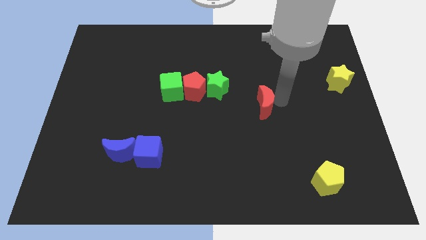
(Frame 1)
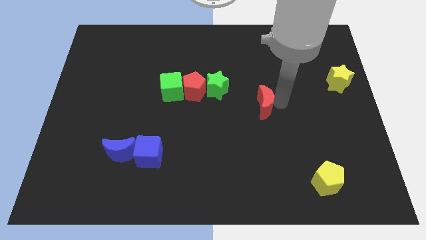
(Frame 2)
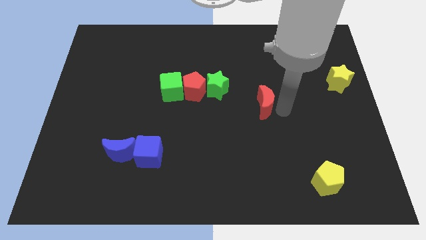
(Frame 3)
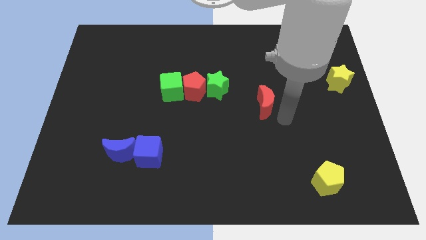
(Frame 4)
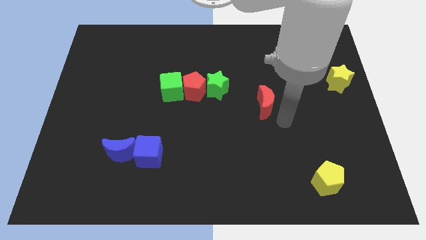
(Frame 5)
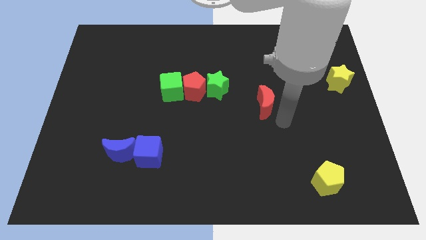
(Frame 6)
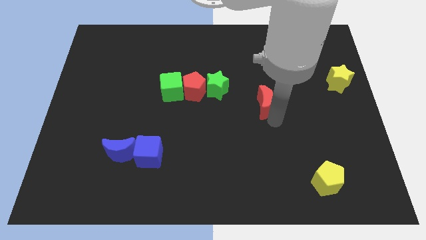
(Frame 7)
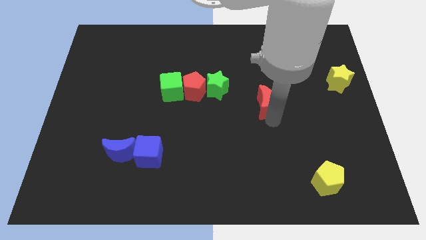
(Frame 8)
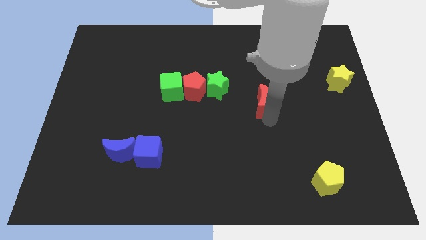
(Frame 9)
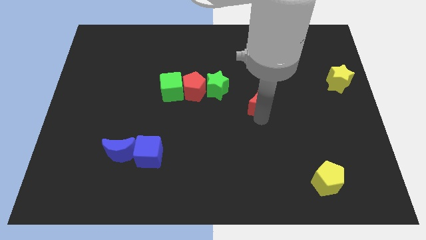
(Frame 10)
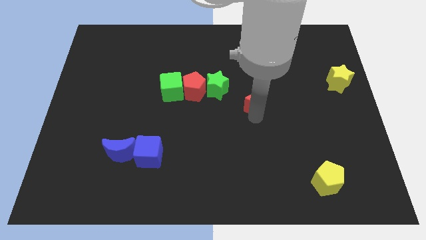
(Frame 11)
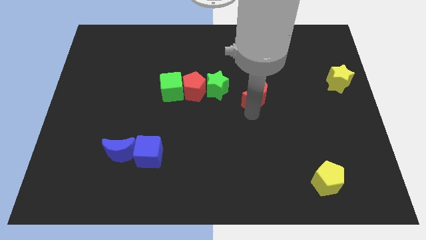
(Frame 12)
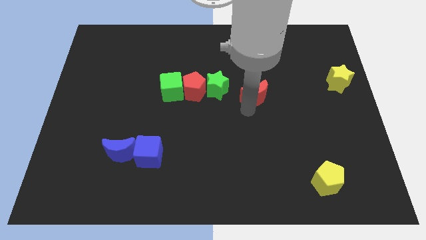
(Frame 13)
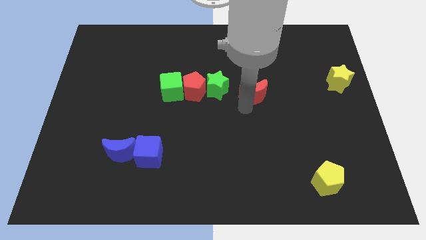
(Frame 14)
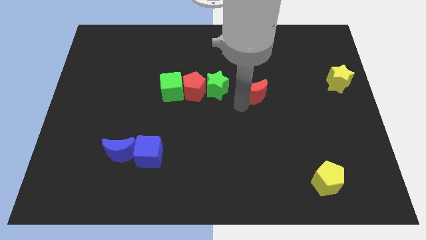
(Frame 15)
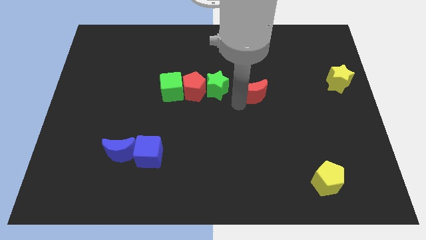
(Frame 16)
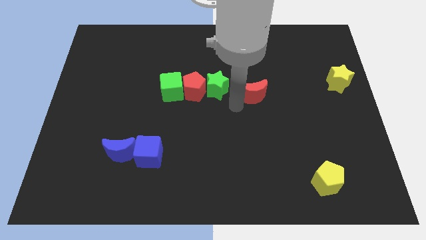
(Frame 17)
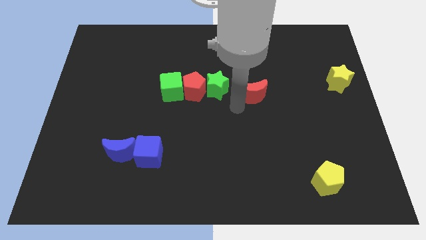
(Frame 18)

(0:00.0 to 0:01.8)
move the red crescent right to the green star

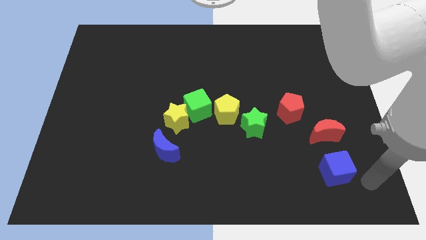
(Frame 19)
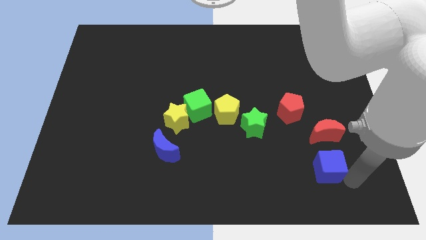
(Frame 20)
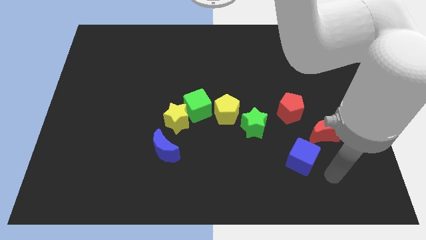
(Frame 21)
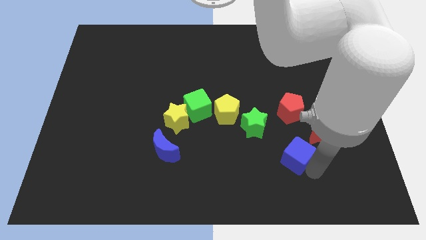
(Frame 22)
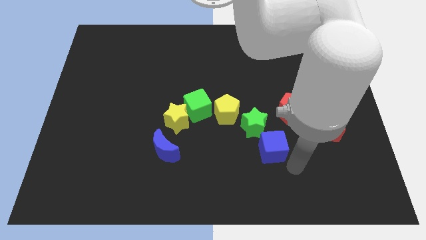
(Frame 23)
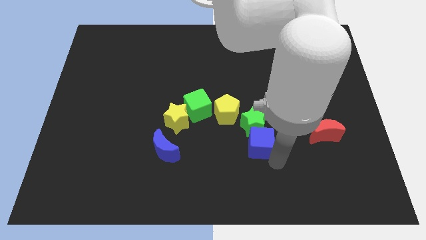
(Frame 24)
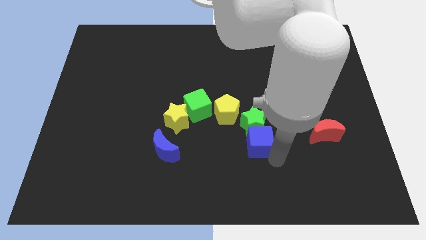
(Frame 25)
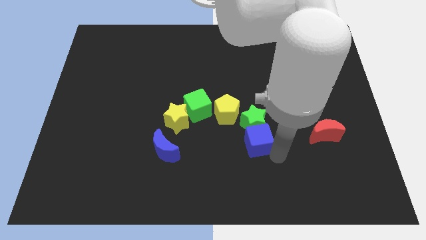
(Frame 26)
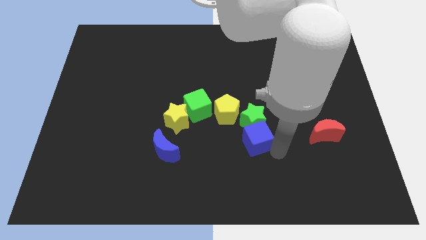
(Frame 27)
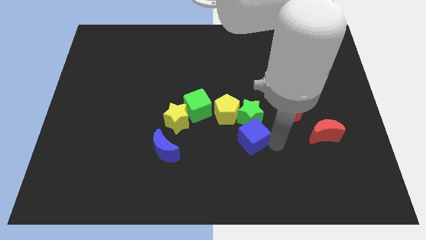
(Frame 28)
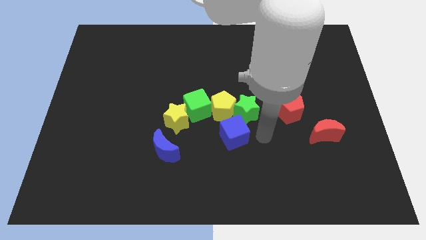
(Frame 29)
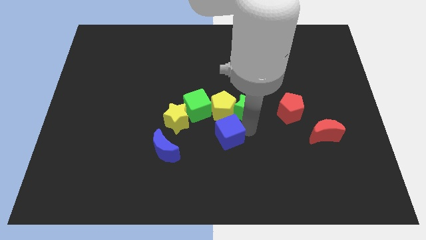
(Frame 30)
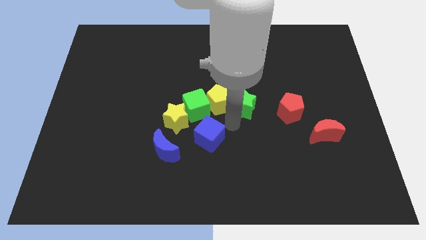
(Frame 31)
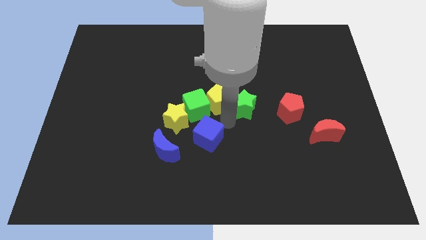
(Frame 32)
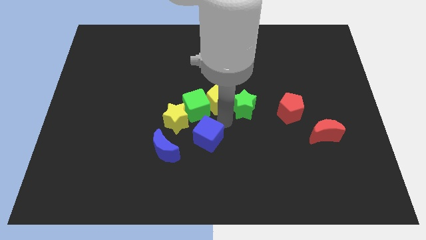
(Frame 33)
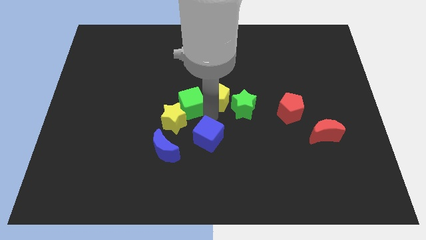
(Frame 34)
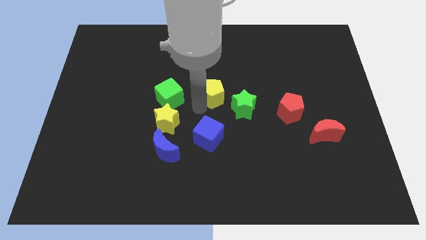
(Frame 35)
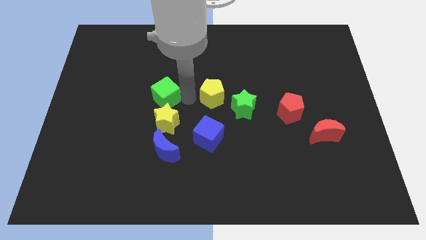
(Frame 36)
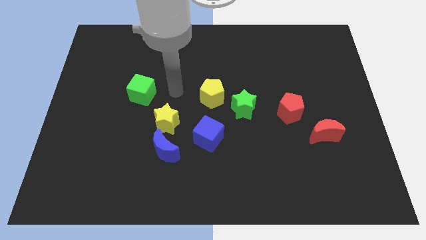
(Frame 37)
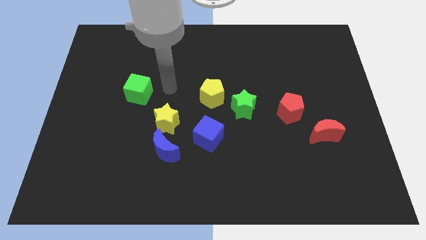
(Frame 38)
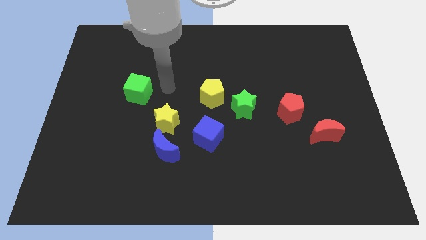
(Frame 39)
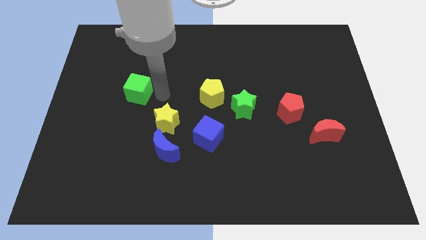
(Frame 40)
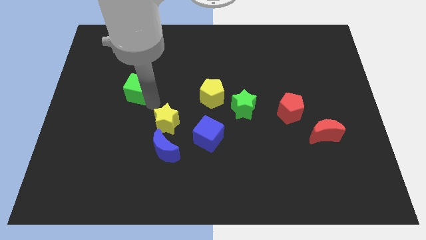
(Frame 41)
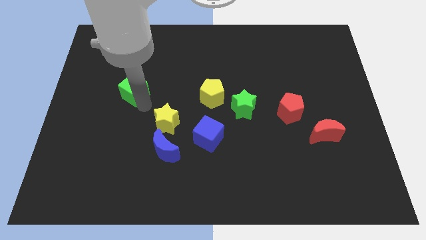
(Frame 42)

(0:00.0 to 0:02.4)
move the blue cube away from the red crescent

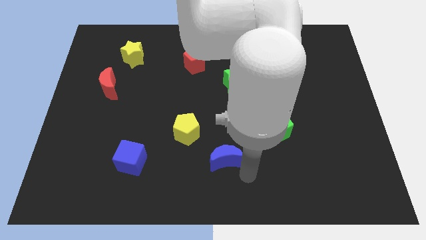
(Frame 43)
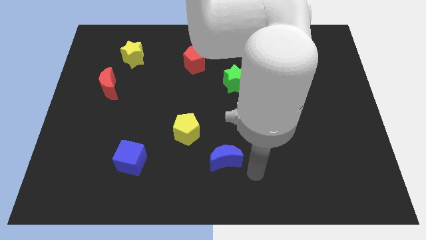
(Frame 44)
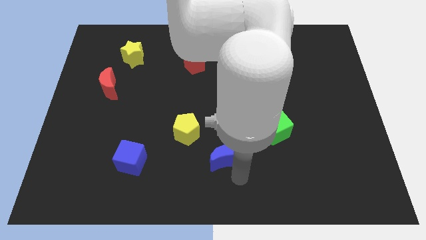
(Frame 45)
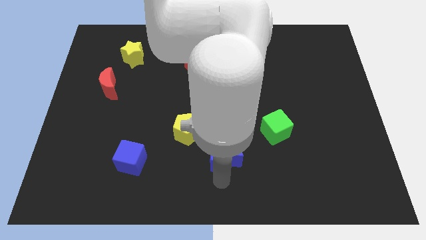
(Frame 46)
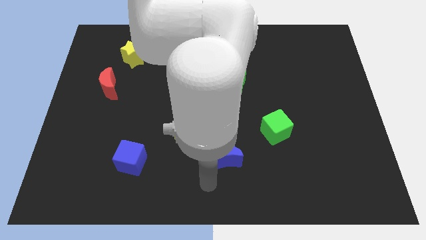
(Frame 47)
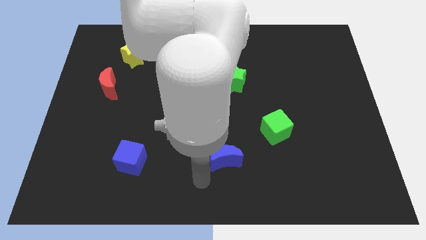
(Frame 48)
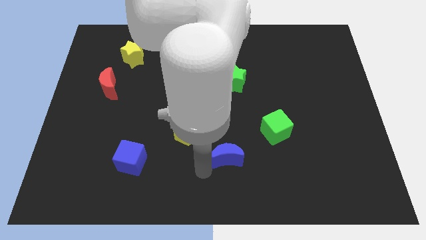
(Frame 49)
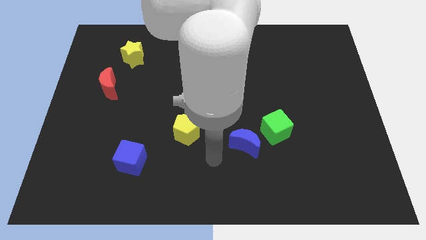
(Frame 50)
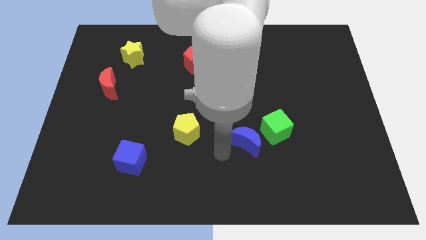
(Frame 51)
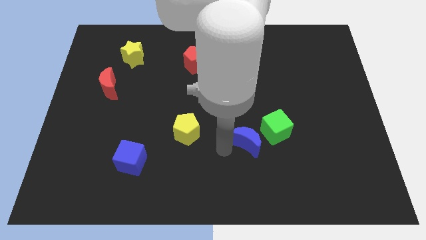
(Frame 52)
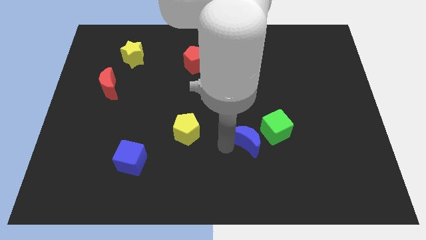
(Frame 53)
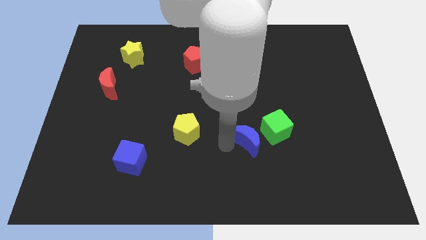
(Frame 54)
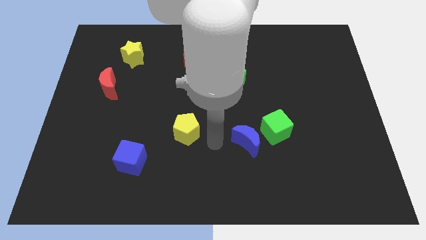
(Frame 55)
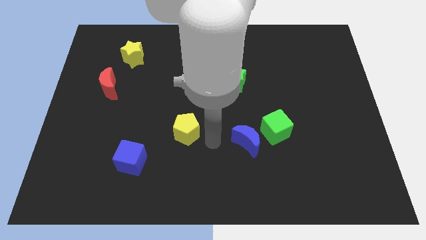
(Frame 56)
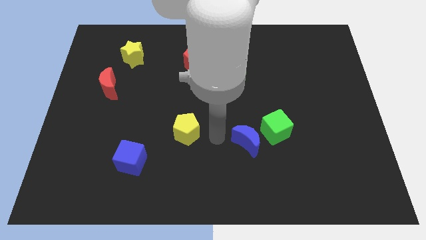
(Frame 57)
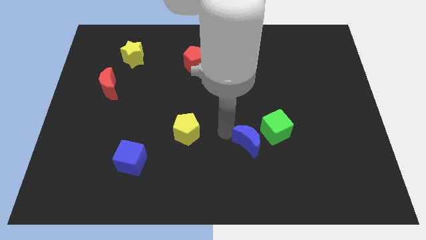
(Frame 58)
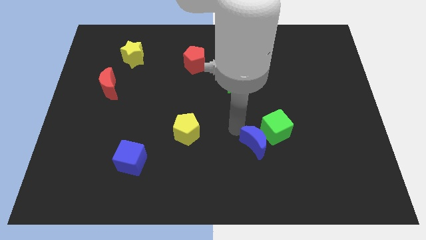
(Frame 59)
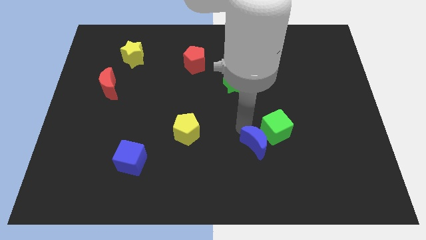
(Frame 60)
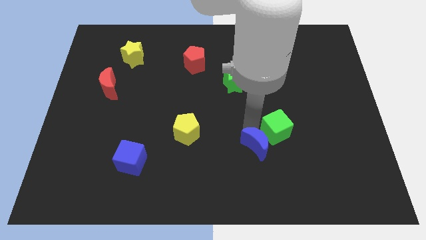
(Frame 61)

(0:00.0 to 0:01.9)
place blue moon to the left of green cube

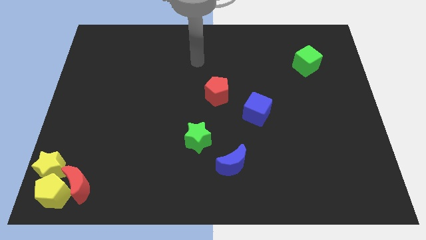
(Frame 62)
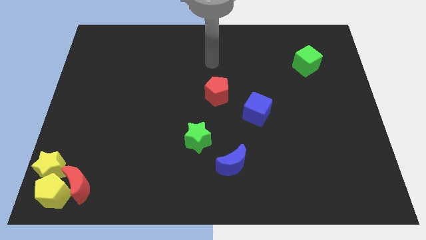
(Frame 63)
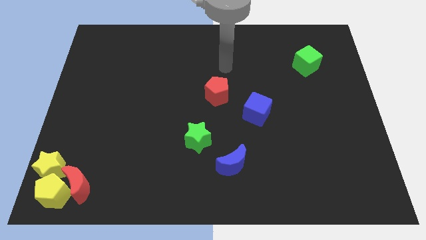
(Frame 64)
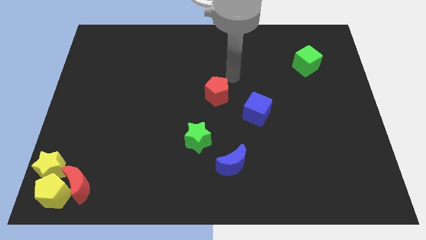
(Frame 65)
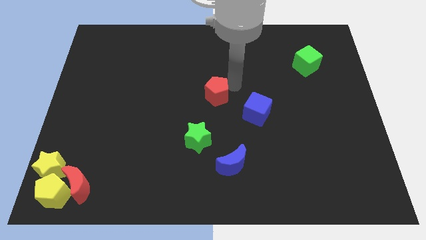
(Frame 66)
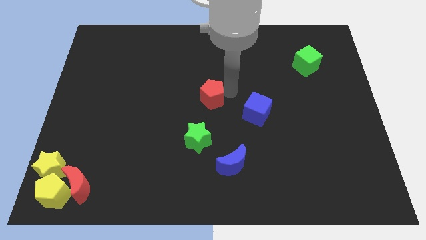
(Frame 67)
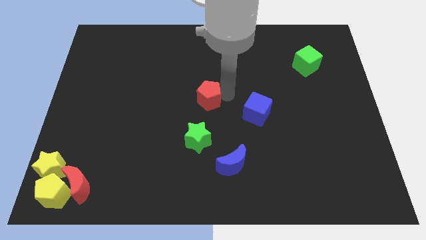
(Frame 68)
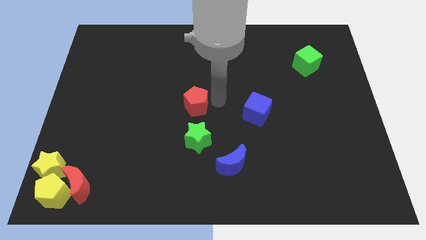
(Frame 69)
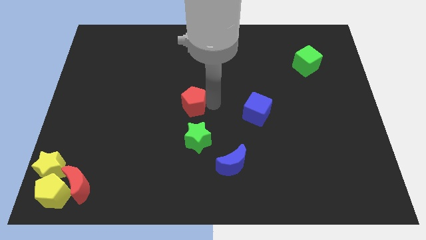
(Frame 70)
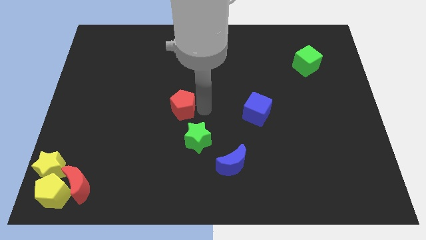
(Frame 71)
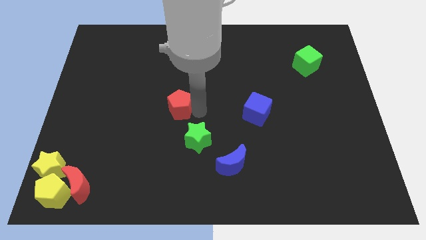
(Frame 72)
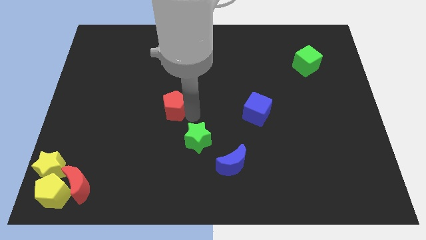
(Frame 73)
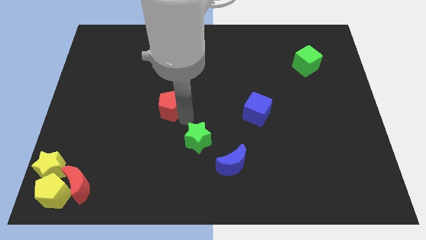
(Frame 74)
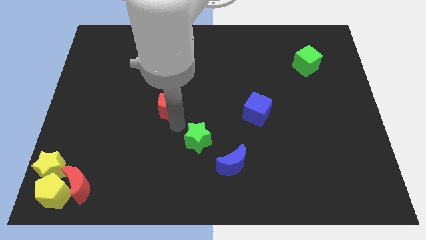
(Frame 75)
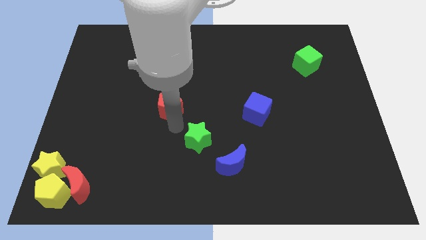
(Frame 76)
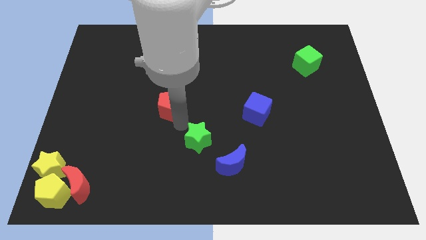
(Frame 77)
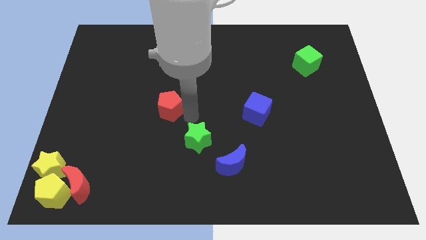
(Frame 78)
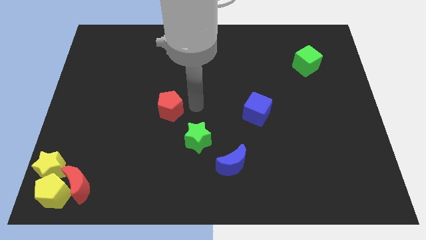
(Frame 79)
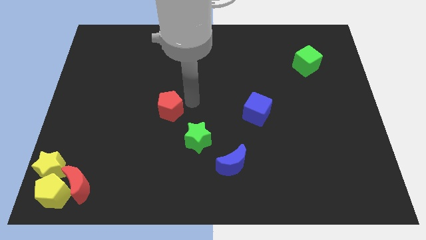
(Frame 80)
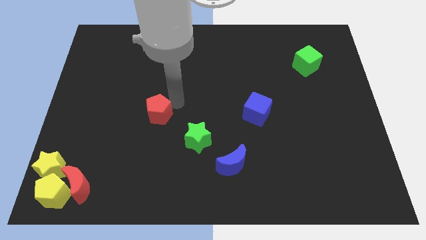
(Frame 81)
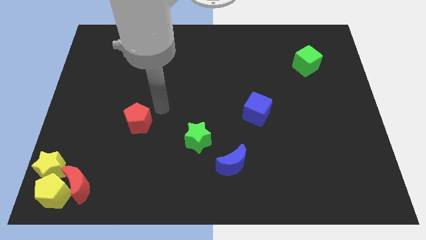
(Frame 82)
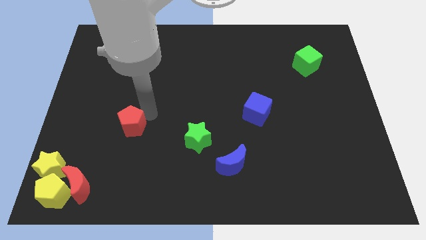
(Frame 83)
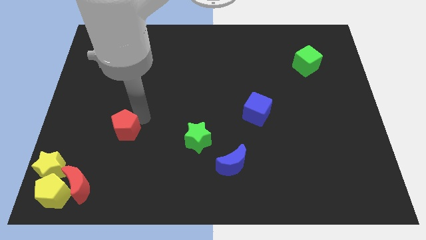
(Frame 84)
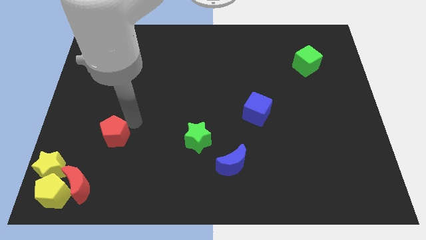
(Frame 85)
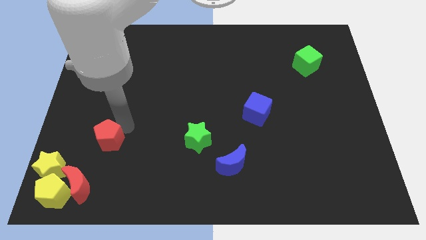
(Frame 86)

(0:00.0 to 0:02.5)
move the red pentagon towards the group of blocks

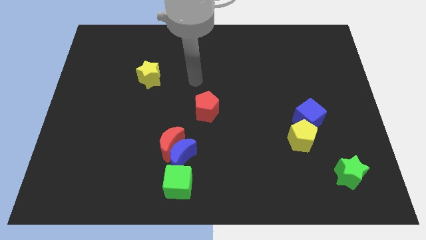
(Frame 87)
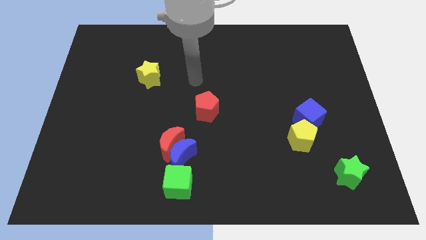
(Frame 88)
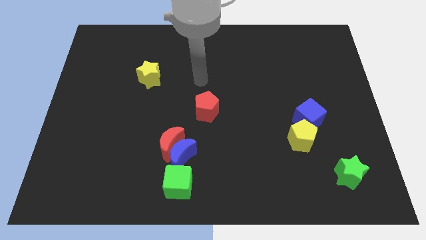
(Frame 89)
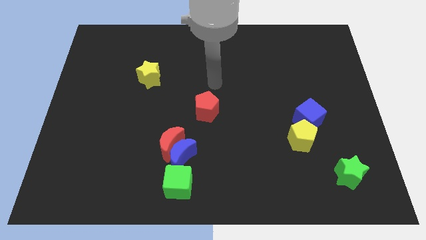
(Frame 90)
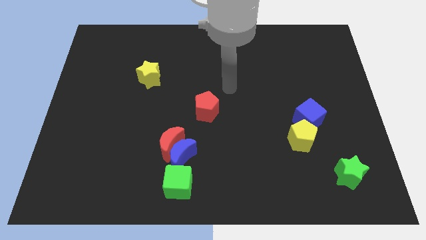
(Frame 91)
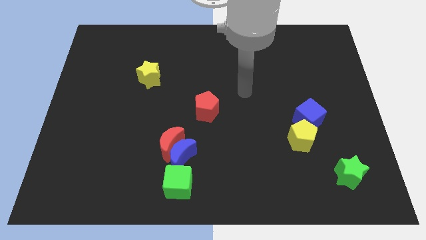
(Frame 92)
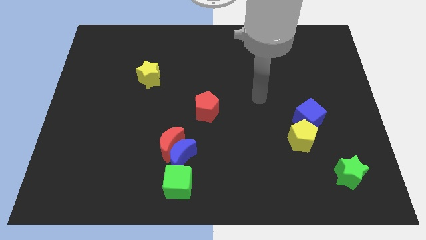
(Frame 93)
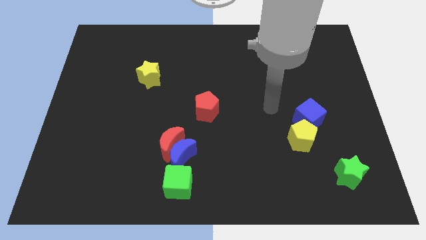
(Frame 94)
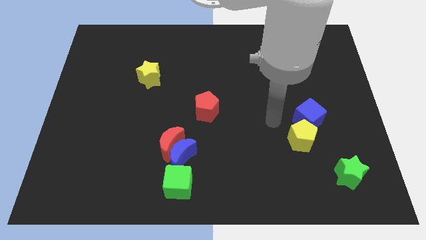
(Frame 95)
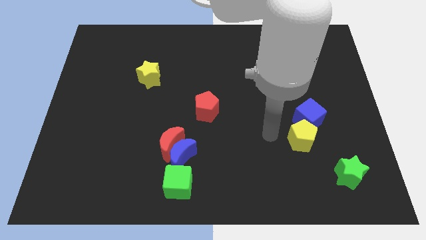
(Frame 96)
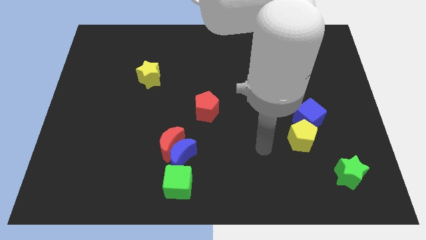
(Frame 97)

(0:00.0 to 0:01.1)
point your arm at the left of the yellow pentagon
